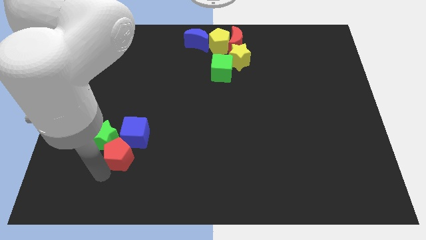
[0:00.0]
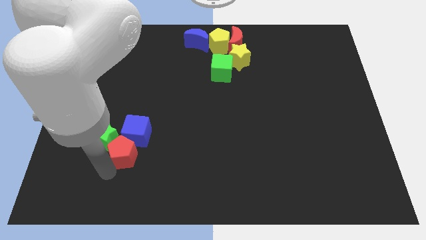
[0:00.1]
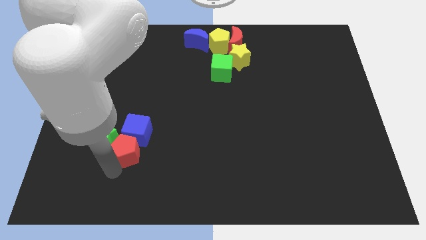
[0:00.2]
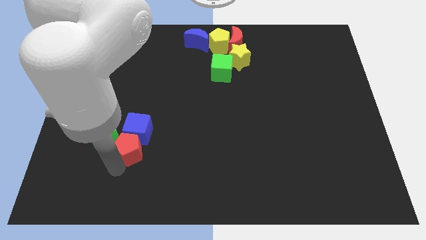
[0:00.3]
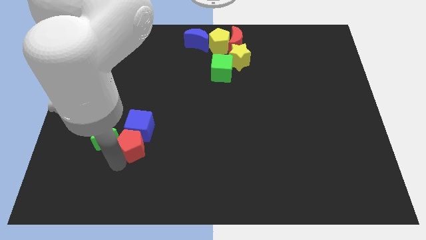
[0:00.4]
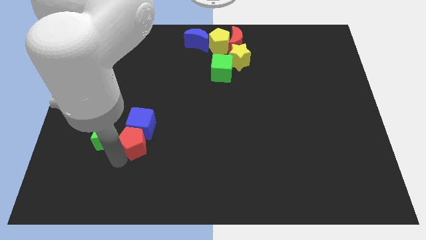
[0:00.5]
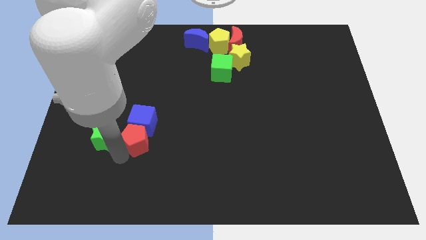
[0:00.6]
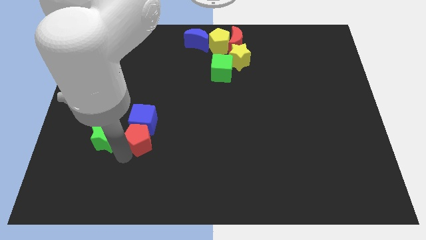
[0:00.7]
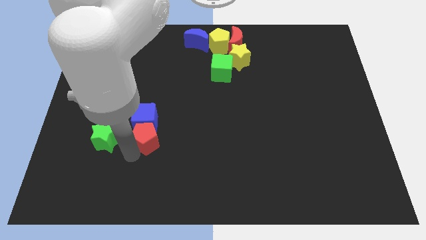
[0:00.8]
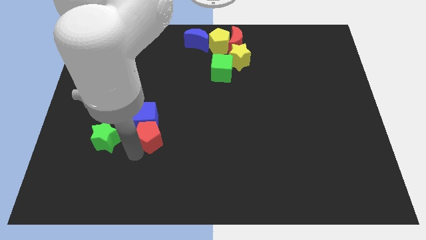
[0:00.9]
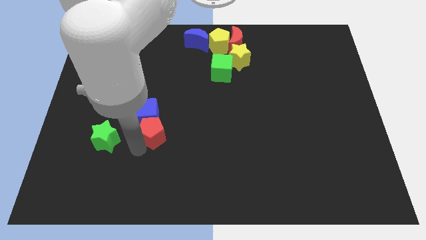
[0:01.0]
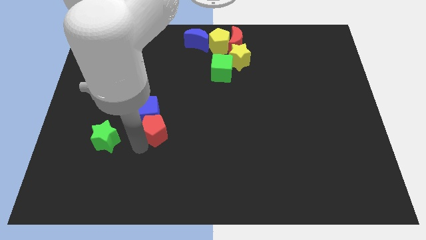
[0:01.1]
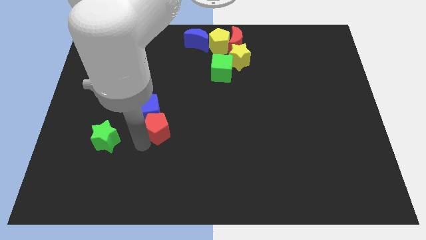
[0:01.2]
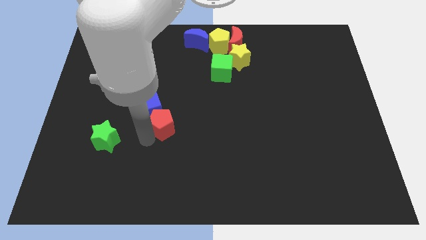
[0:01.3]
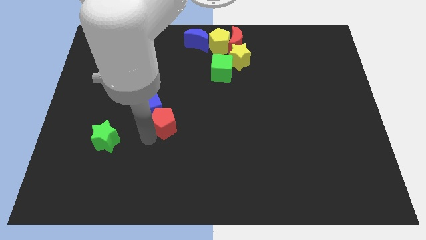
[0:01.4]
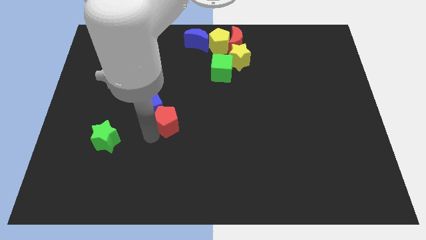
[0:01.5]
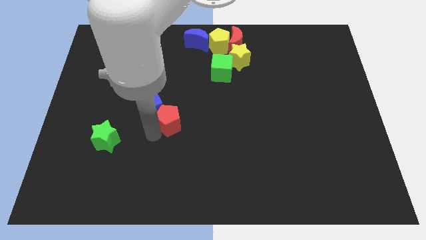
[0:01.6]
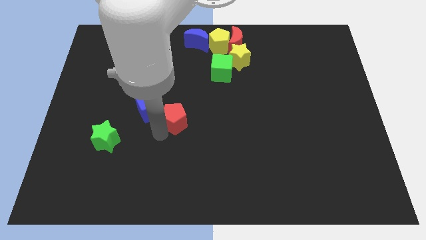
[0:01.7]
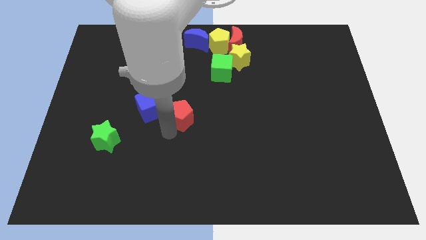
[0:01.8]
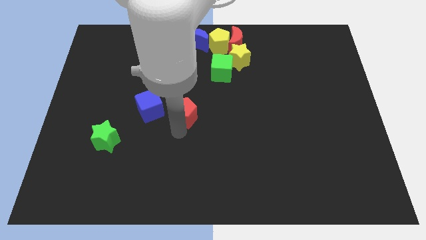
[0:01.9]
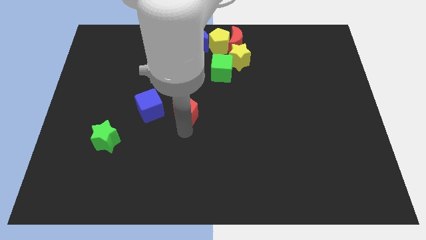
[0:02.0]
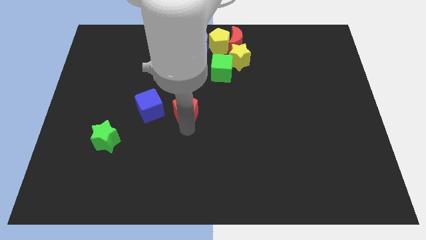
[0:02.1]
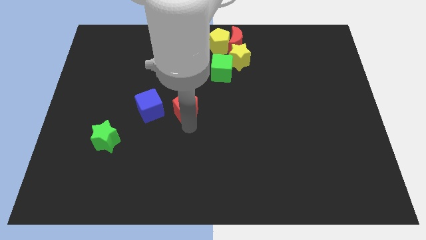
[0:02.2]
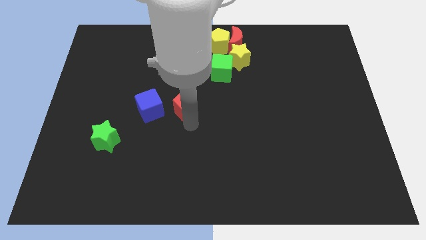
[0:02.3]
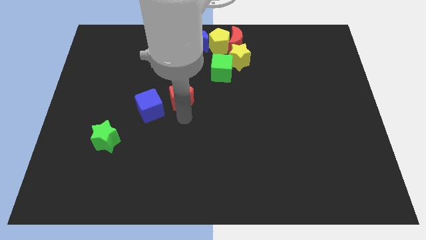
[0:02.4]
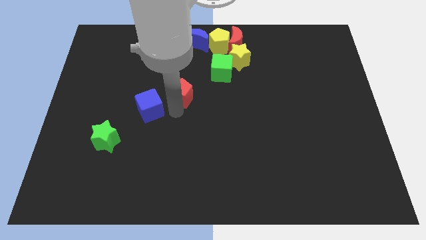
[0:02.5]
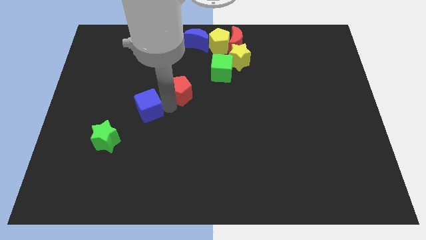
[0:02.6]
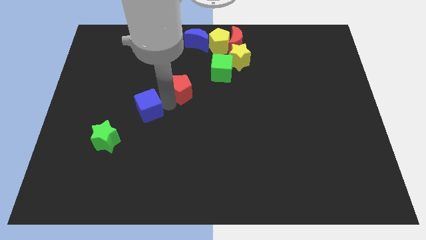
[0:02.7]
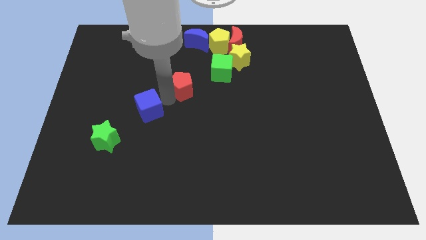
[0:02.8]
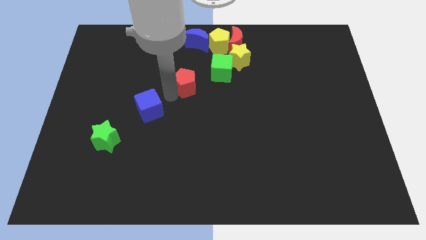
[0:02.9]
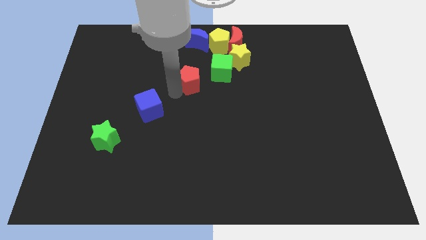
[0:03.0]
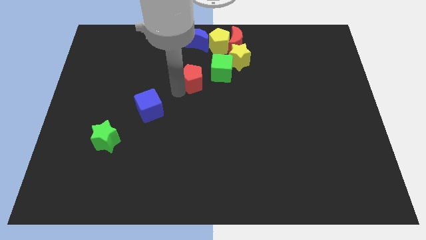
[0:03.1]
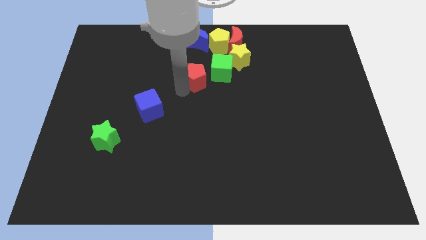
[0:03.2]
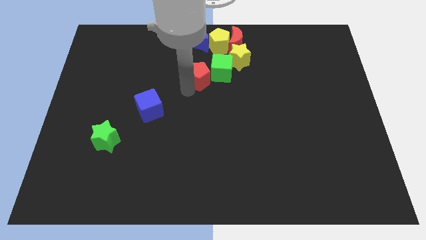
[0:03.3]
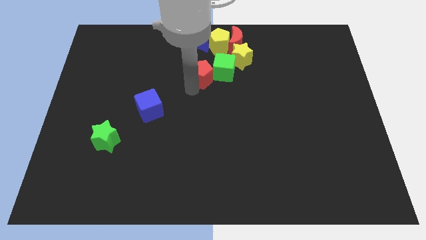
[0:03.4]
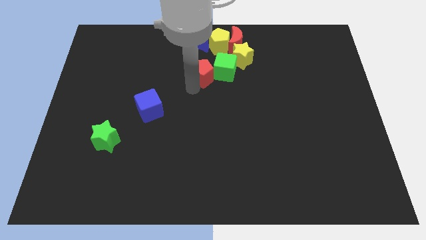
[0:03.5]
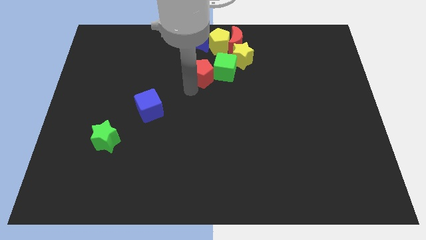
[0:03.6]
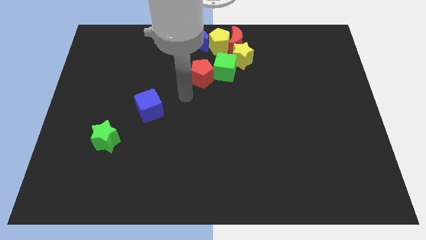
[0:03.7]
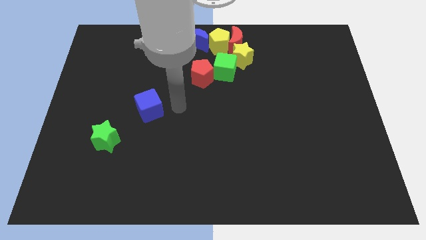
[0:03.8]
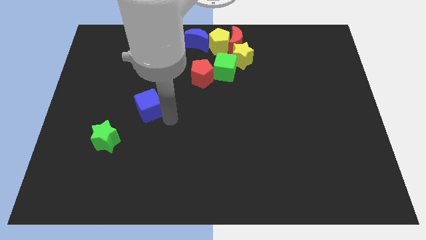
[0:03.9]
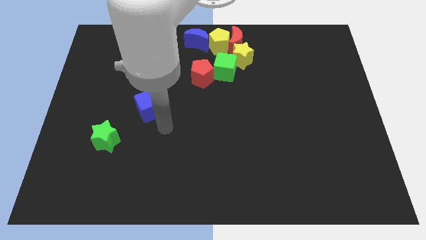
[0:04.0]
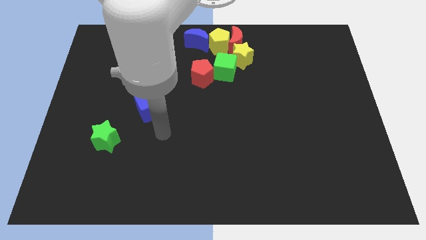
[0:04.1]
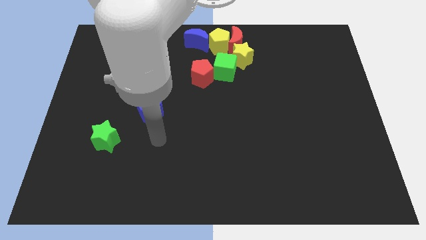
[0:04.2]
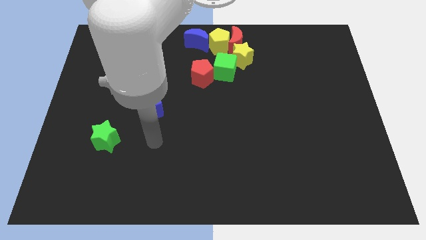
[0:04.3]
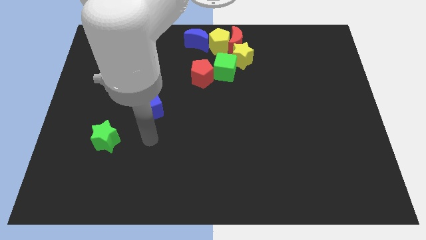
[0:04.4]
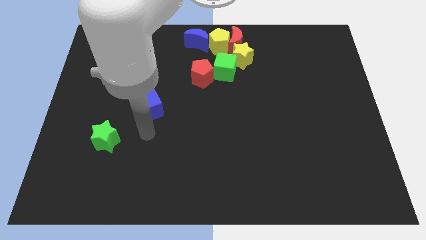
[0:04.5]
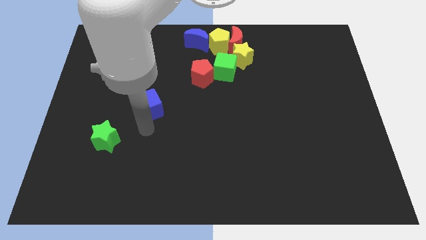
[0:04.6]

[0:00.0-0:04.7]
move the red pentagon into the green cube

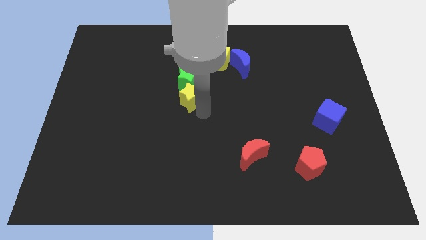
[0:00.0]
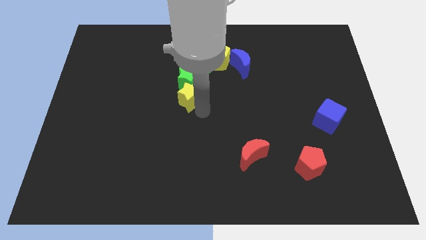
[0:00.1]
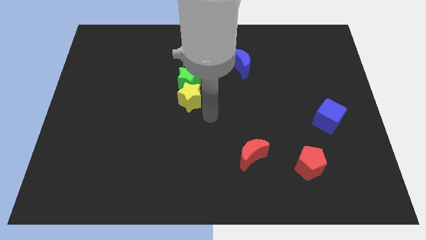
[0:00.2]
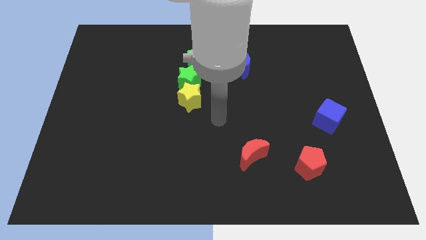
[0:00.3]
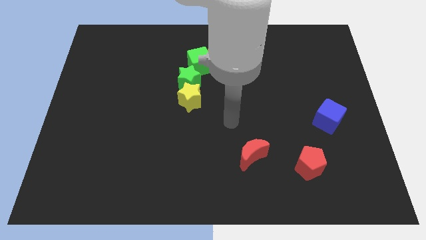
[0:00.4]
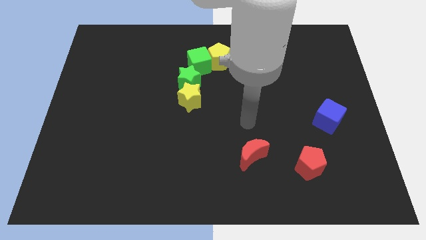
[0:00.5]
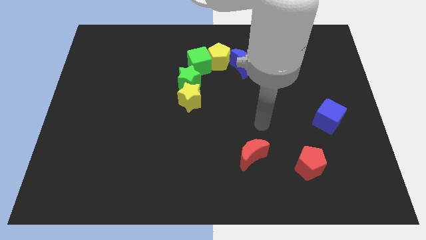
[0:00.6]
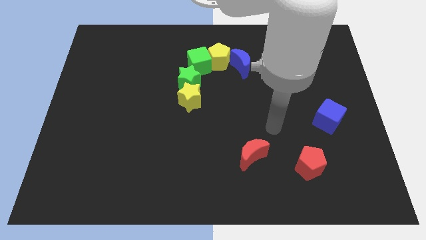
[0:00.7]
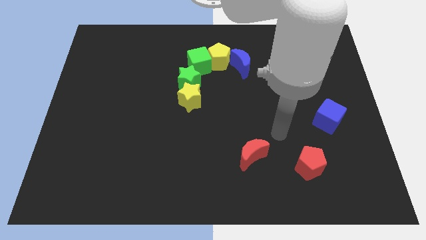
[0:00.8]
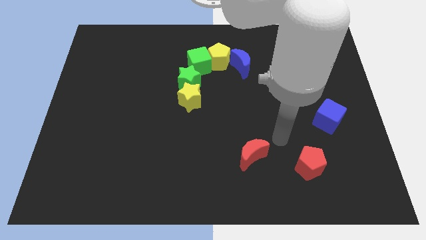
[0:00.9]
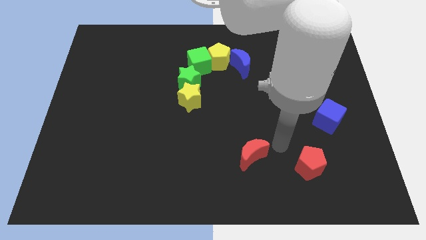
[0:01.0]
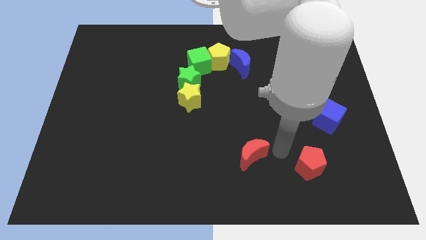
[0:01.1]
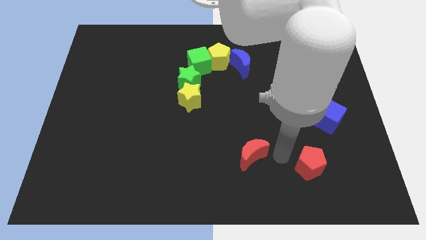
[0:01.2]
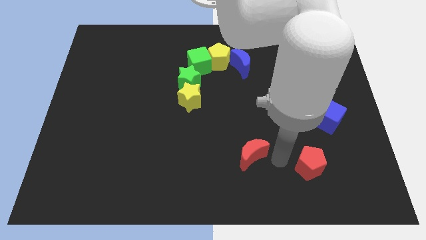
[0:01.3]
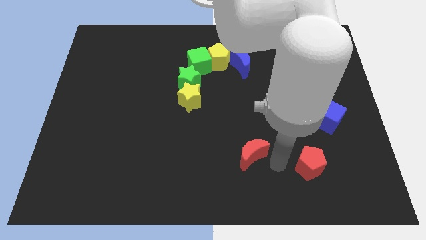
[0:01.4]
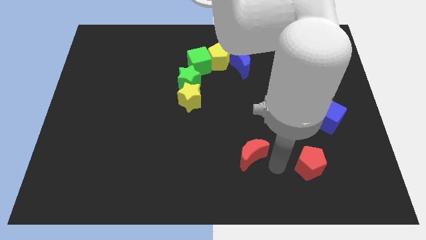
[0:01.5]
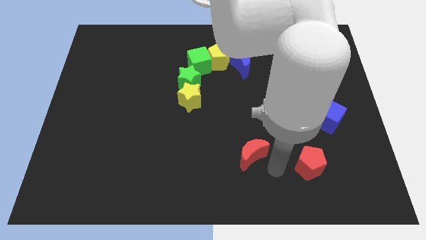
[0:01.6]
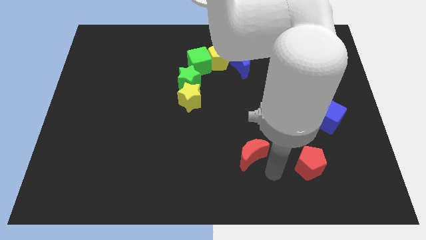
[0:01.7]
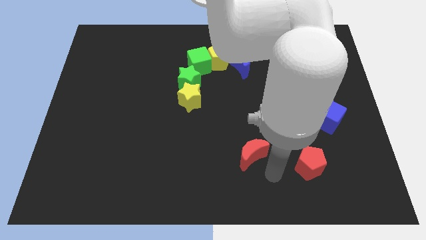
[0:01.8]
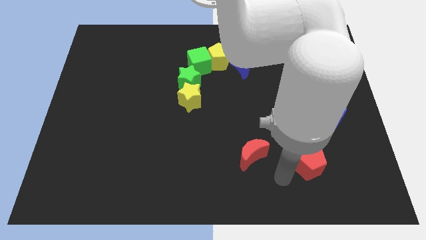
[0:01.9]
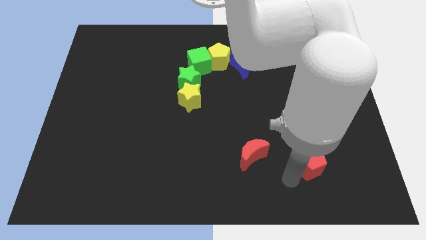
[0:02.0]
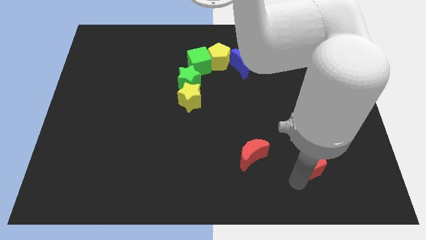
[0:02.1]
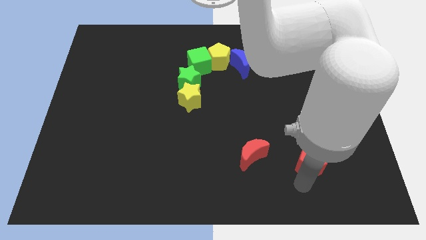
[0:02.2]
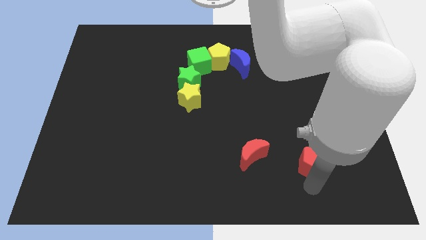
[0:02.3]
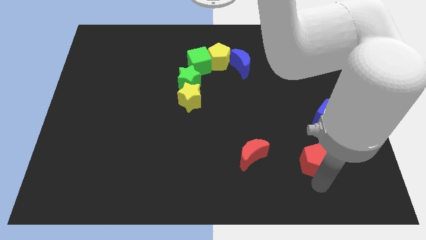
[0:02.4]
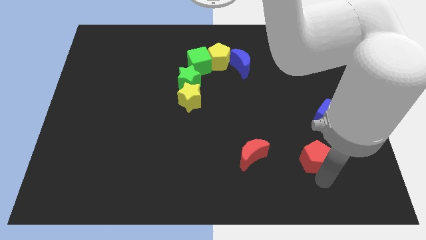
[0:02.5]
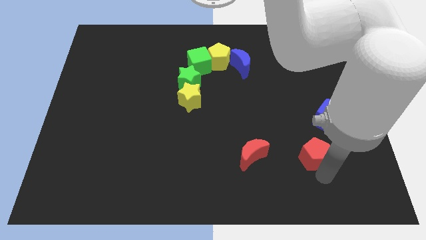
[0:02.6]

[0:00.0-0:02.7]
move your arm below the red pentagon

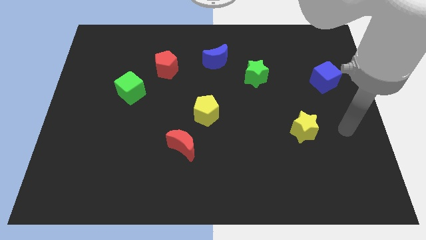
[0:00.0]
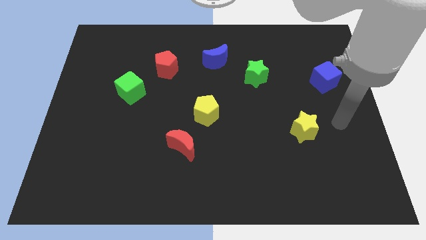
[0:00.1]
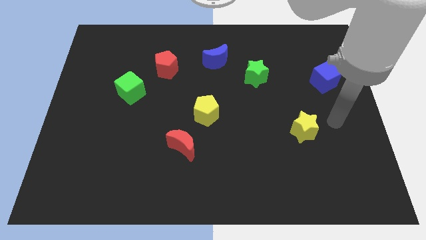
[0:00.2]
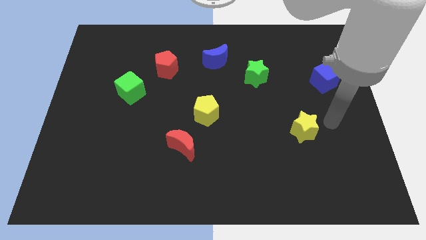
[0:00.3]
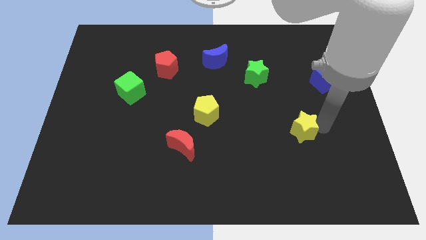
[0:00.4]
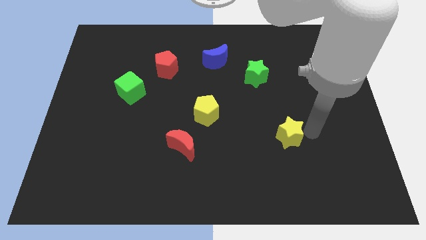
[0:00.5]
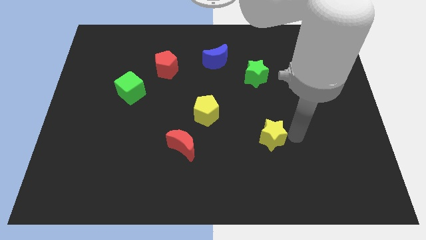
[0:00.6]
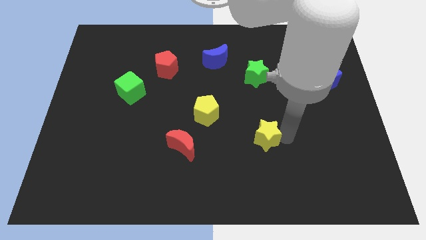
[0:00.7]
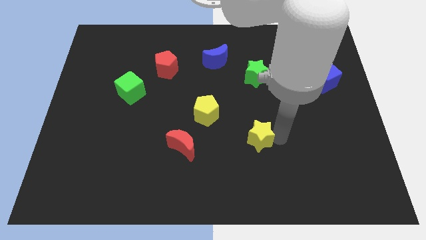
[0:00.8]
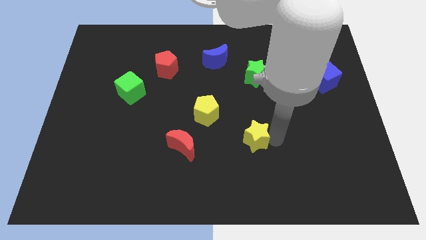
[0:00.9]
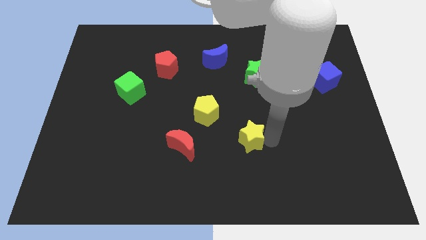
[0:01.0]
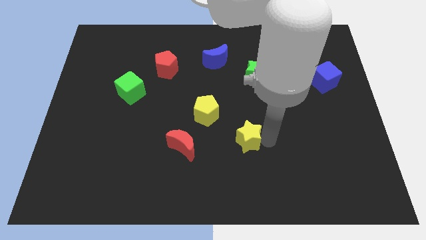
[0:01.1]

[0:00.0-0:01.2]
slide the yellow star to the left

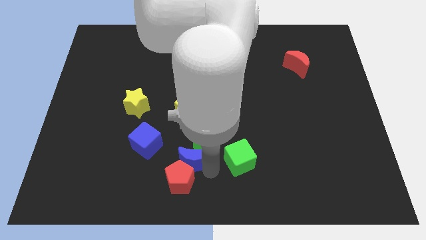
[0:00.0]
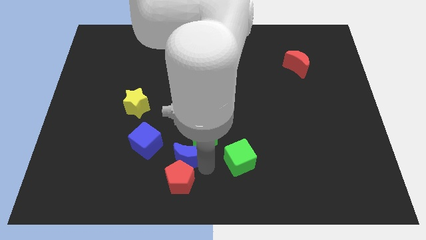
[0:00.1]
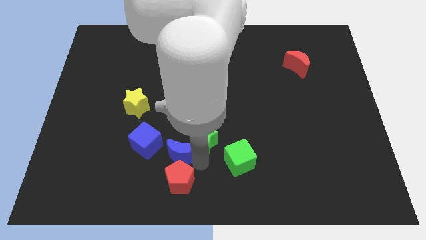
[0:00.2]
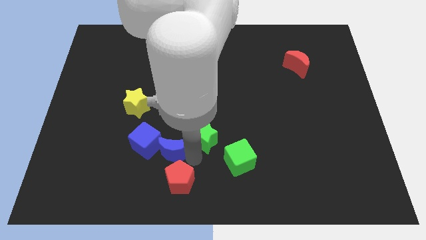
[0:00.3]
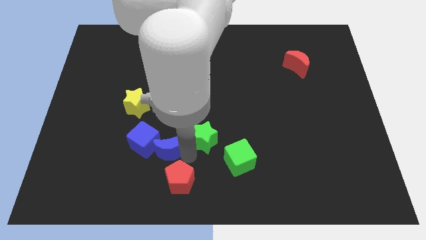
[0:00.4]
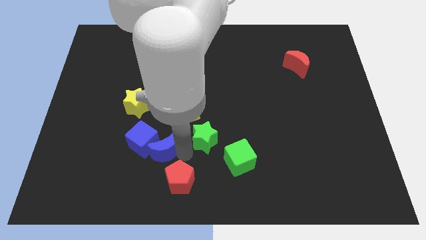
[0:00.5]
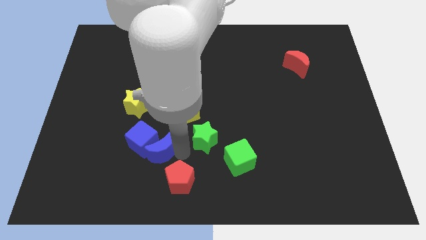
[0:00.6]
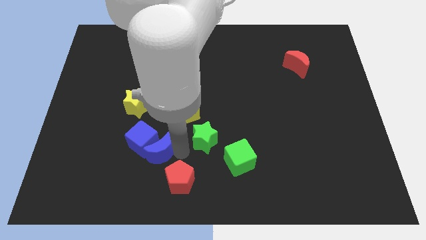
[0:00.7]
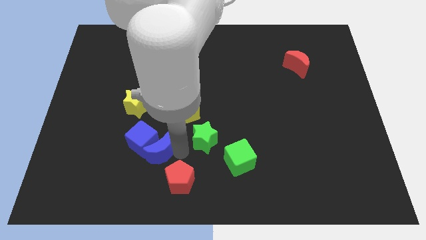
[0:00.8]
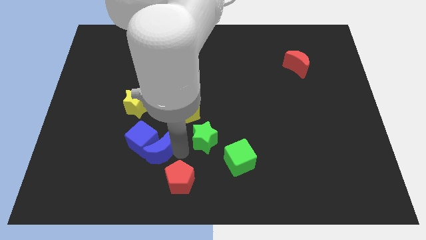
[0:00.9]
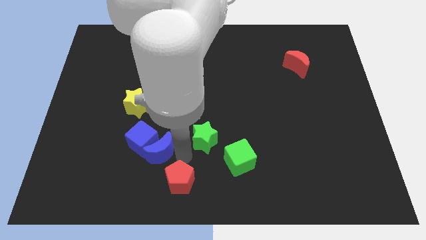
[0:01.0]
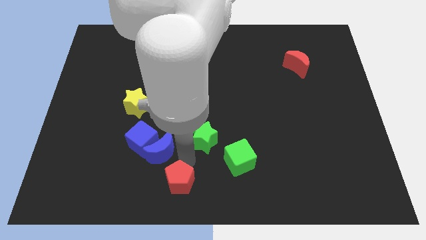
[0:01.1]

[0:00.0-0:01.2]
move the blue crescent into the blue cube
